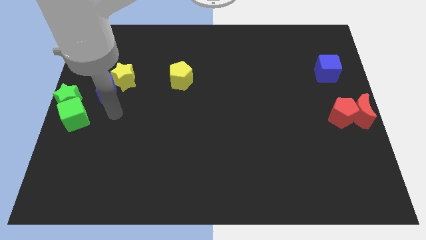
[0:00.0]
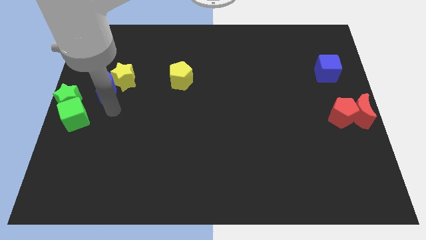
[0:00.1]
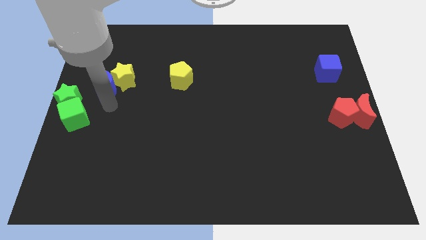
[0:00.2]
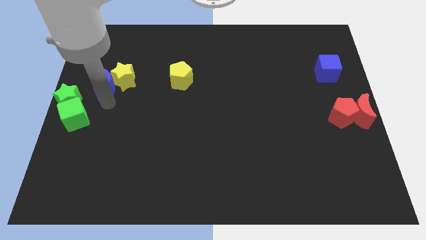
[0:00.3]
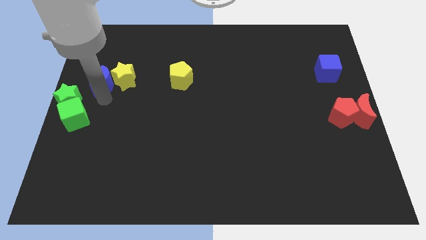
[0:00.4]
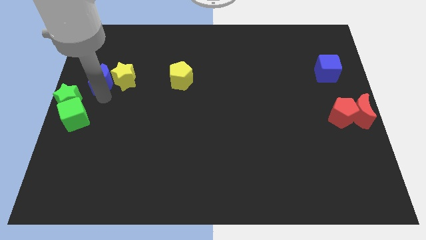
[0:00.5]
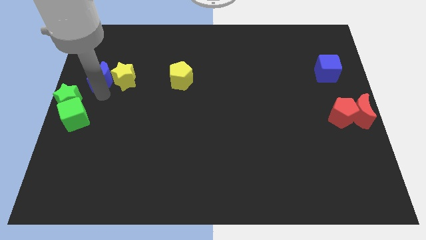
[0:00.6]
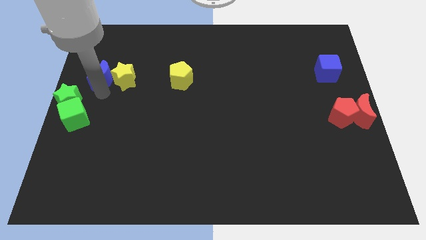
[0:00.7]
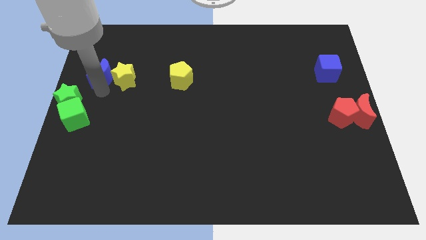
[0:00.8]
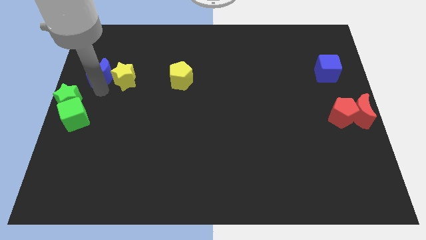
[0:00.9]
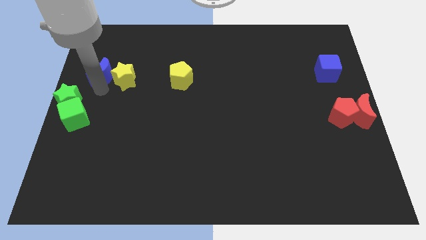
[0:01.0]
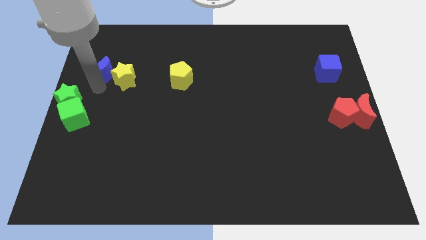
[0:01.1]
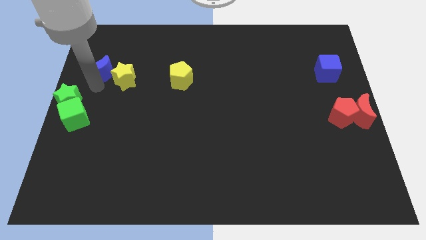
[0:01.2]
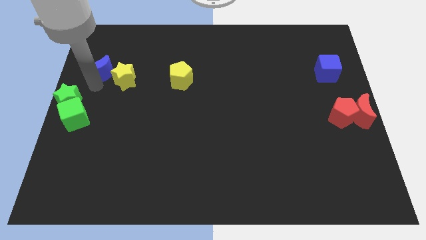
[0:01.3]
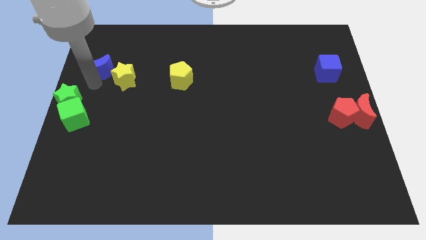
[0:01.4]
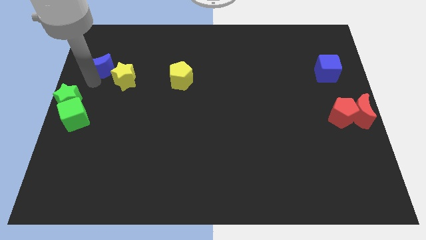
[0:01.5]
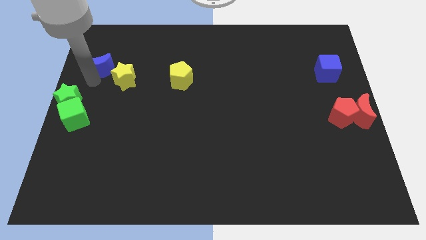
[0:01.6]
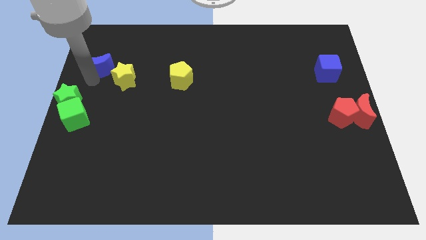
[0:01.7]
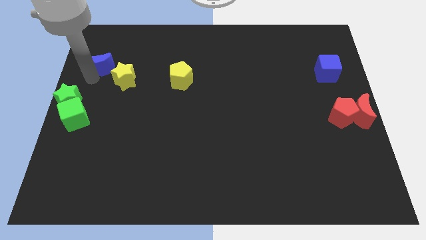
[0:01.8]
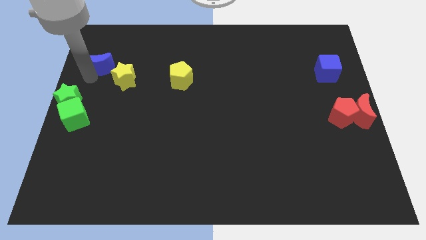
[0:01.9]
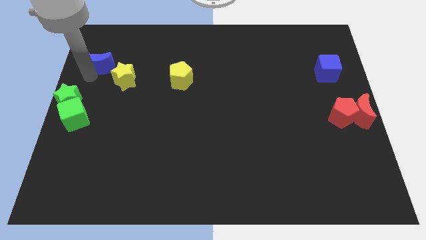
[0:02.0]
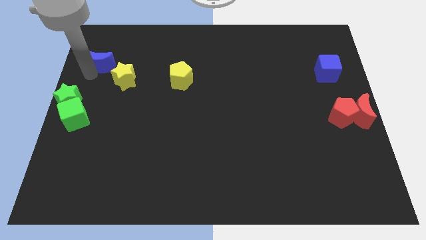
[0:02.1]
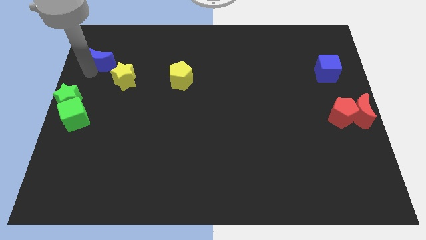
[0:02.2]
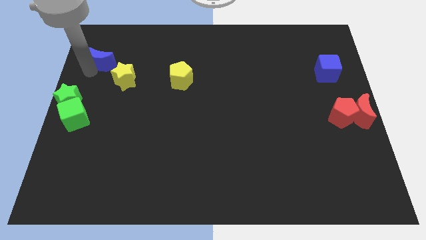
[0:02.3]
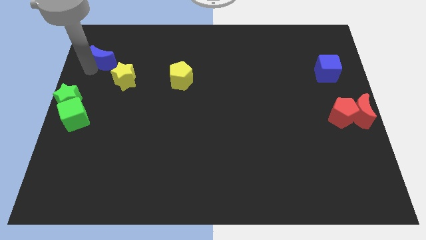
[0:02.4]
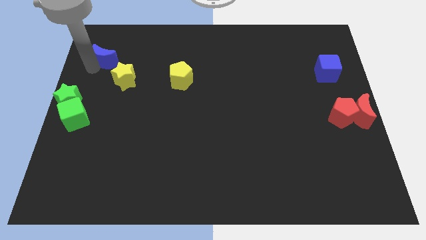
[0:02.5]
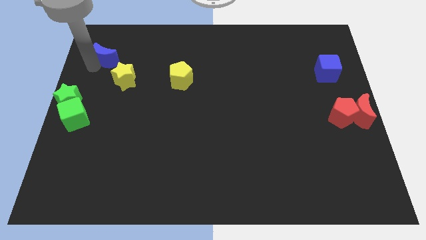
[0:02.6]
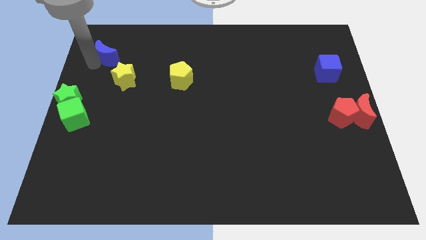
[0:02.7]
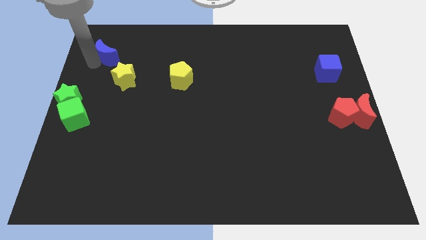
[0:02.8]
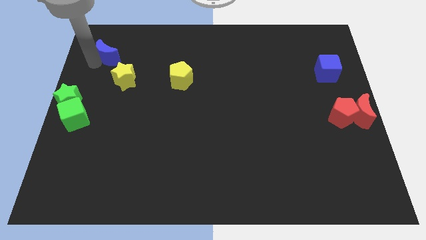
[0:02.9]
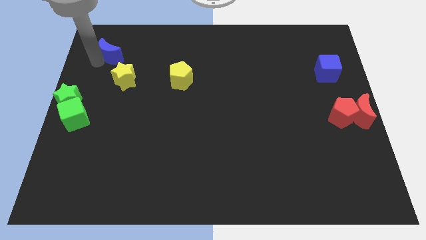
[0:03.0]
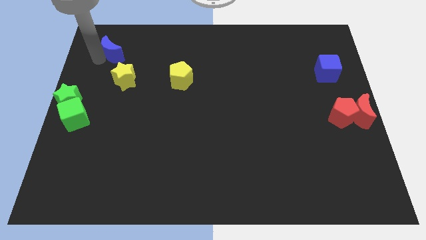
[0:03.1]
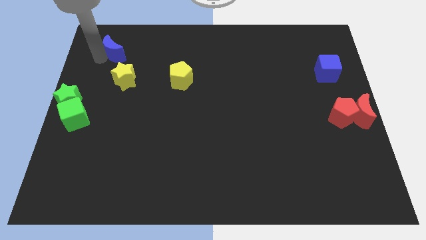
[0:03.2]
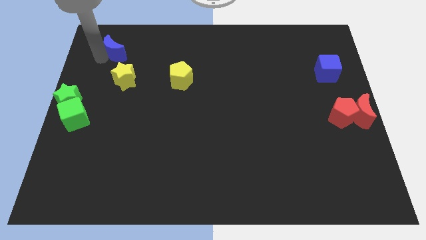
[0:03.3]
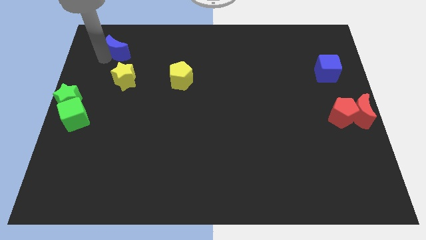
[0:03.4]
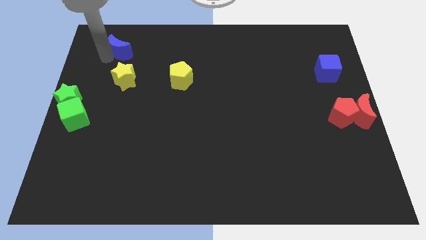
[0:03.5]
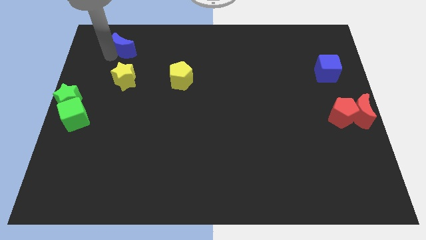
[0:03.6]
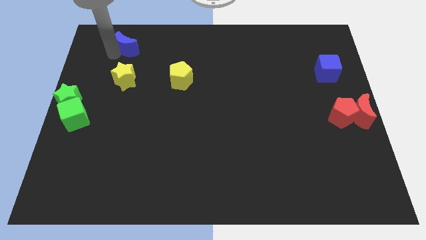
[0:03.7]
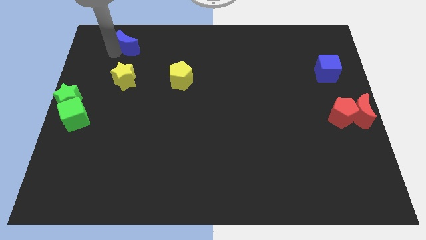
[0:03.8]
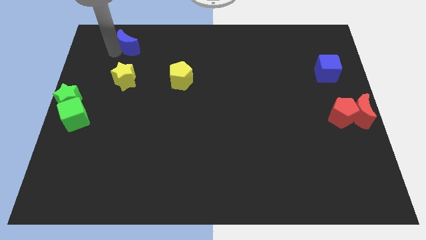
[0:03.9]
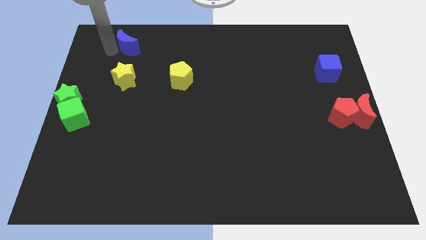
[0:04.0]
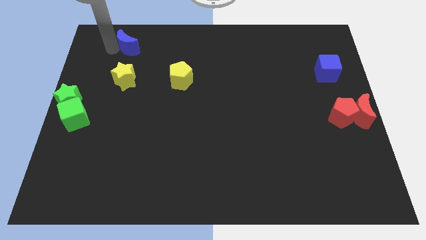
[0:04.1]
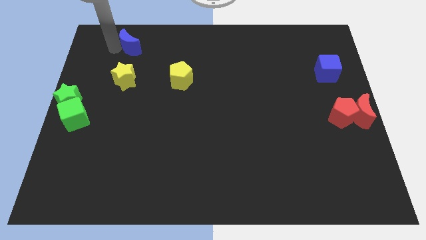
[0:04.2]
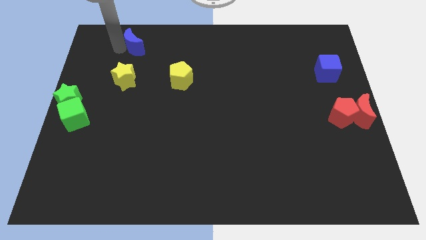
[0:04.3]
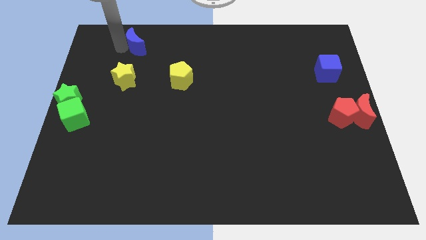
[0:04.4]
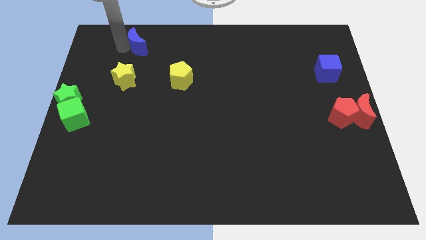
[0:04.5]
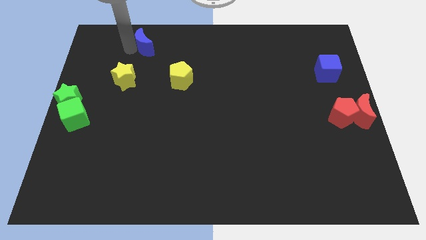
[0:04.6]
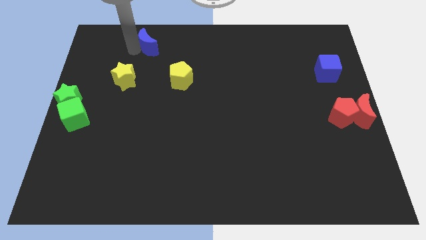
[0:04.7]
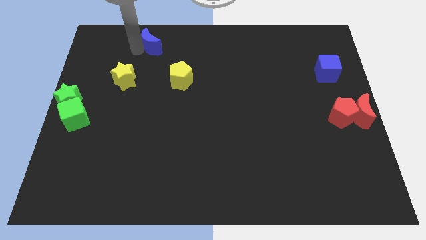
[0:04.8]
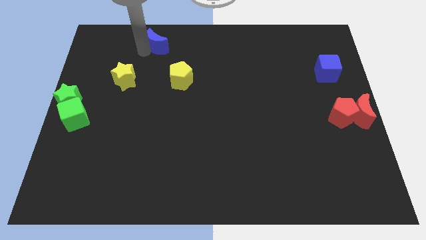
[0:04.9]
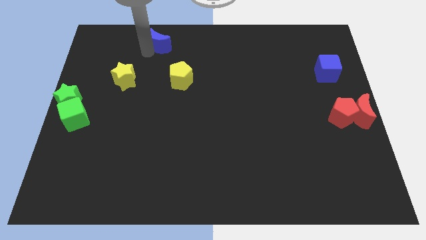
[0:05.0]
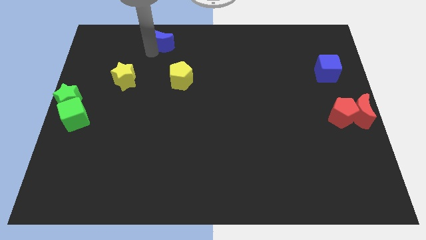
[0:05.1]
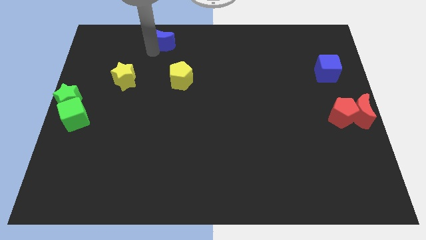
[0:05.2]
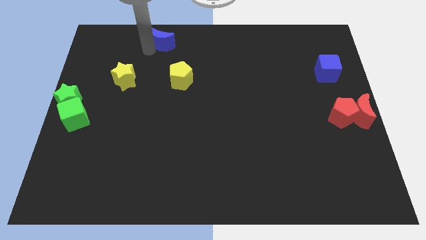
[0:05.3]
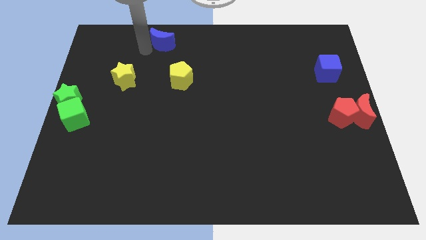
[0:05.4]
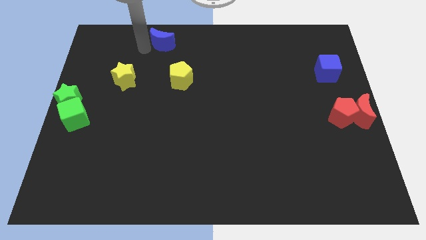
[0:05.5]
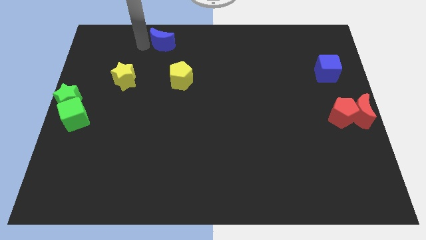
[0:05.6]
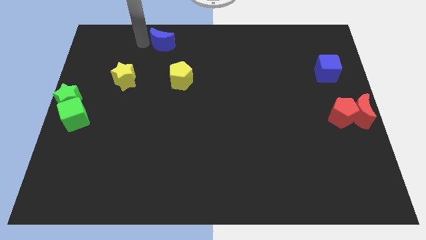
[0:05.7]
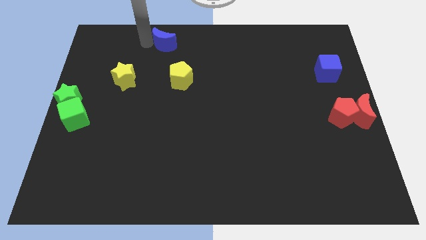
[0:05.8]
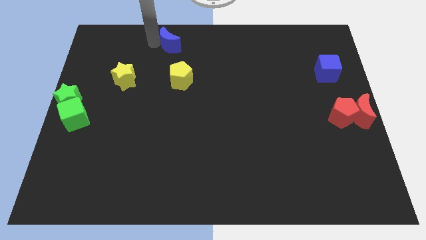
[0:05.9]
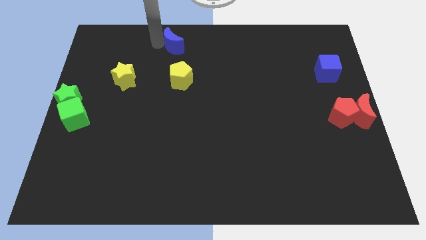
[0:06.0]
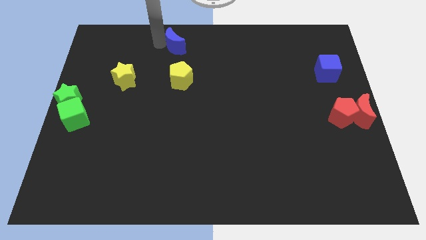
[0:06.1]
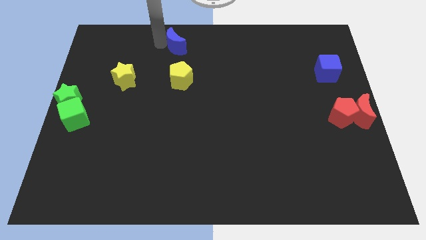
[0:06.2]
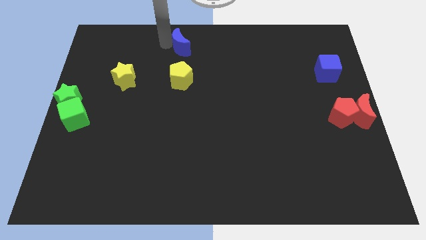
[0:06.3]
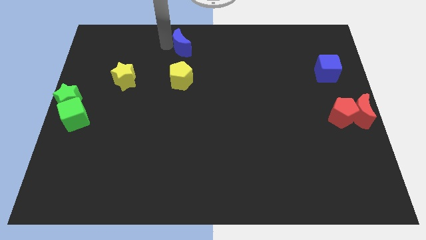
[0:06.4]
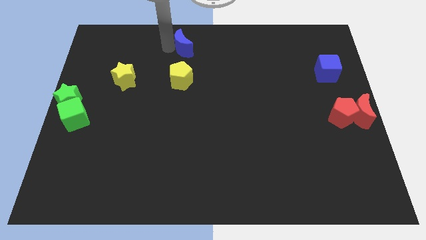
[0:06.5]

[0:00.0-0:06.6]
place blue moon to the top of yellow pentagon

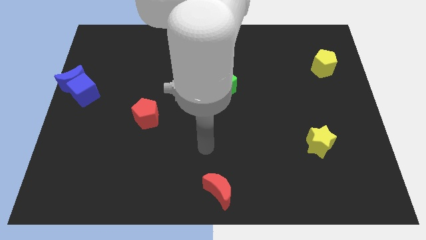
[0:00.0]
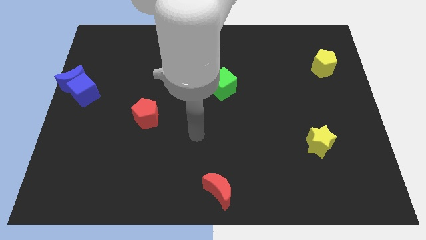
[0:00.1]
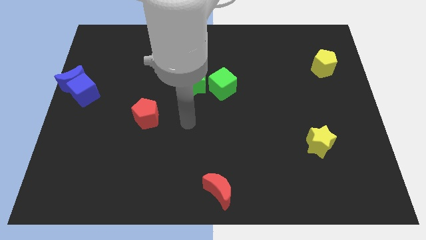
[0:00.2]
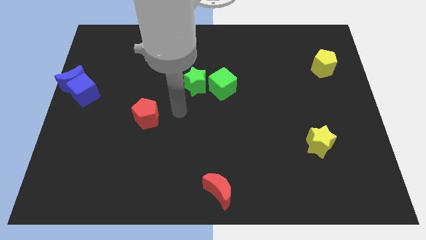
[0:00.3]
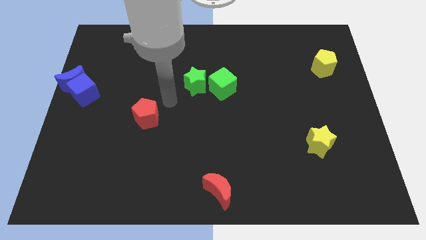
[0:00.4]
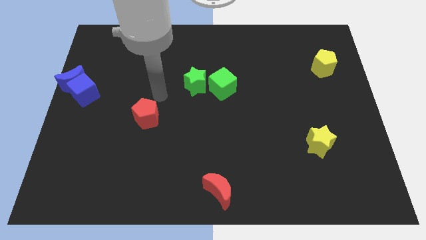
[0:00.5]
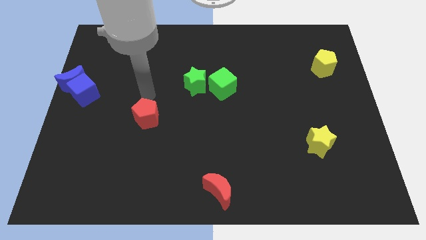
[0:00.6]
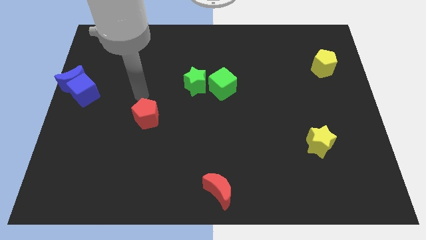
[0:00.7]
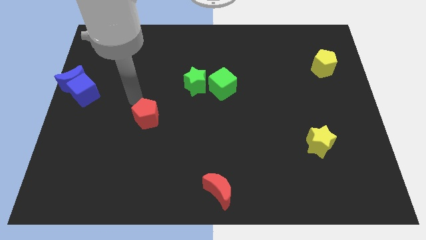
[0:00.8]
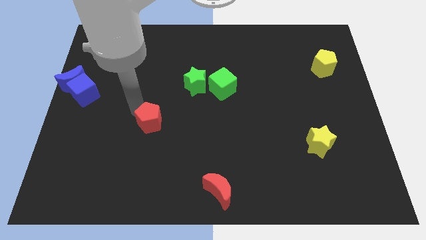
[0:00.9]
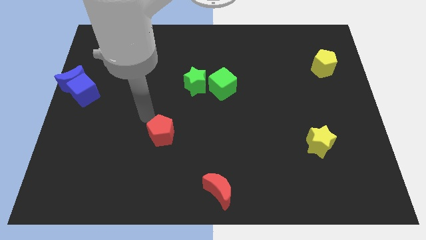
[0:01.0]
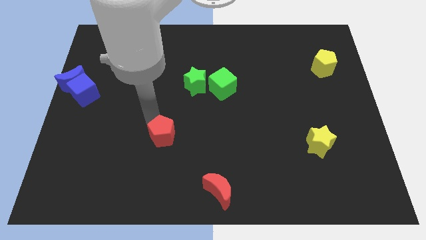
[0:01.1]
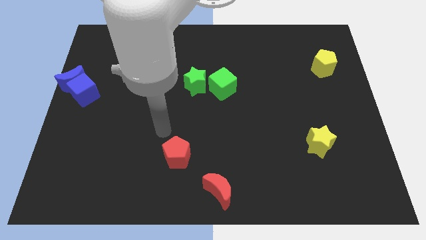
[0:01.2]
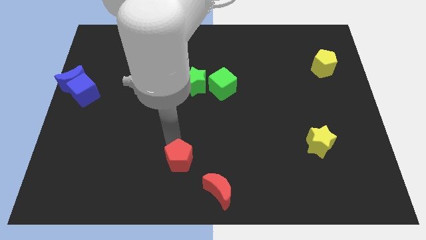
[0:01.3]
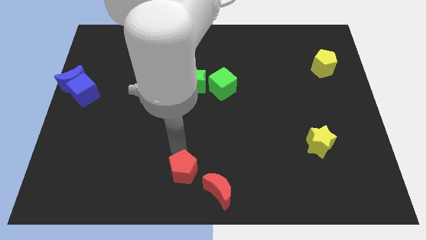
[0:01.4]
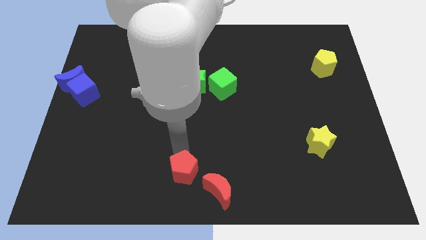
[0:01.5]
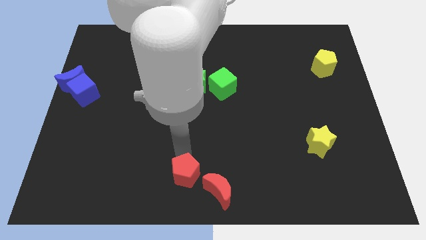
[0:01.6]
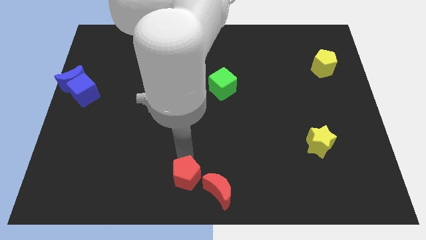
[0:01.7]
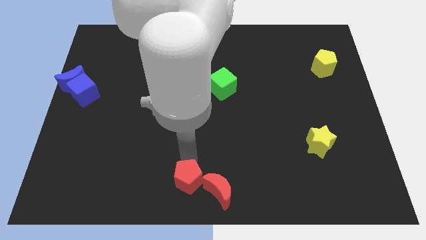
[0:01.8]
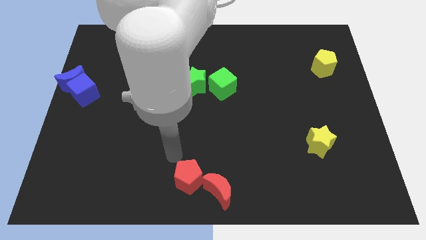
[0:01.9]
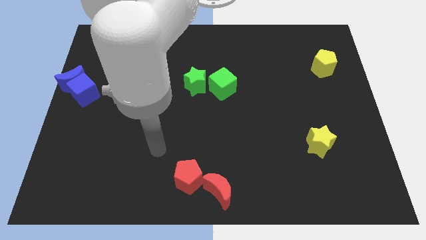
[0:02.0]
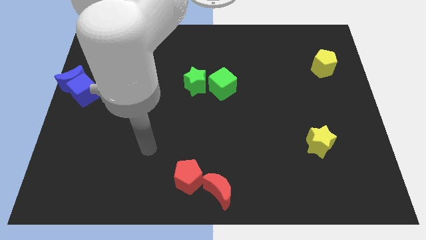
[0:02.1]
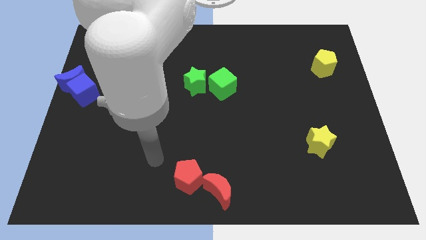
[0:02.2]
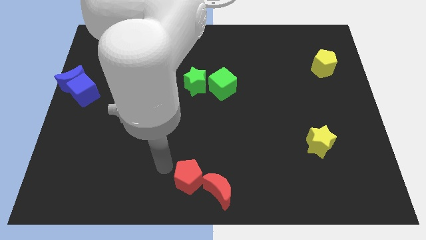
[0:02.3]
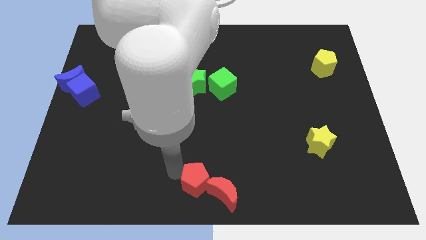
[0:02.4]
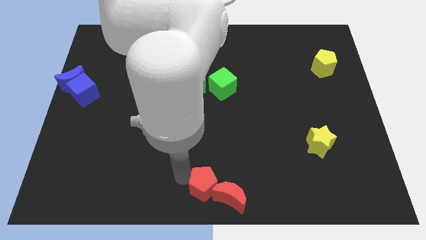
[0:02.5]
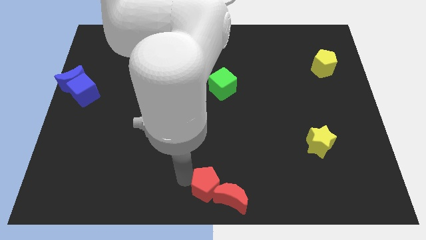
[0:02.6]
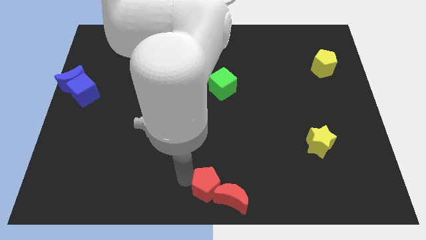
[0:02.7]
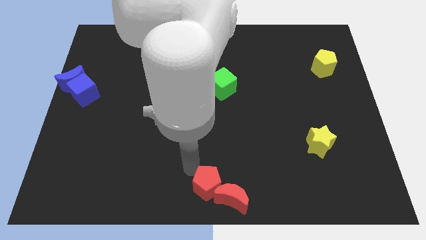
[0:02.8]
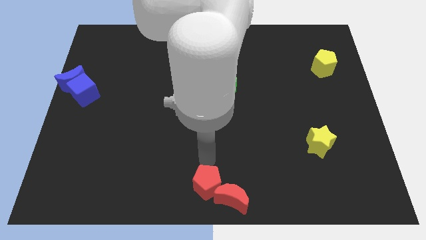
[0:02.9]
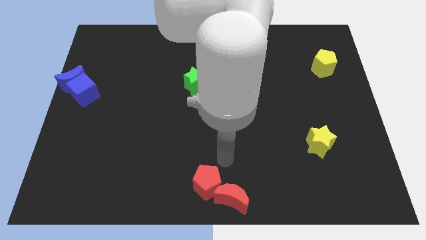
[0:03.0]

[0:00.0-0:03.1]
push the red pentagon towards the red crescent
